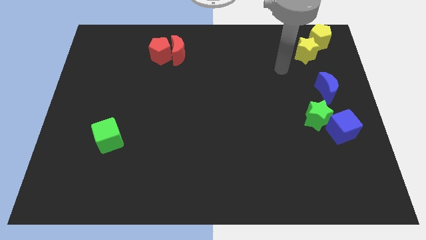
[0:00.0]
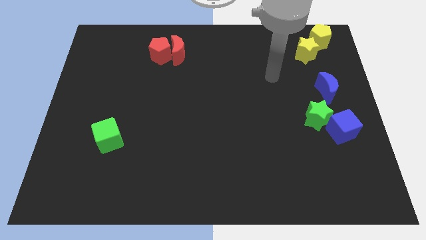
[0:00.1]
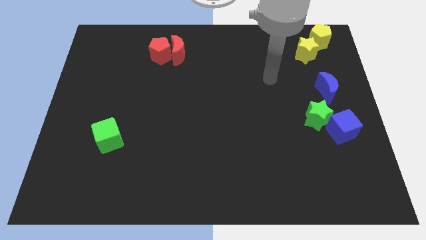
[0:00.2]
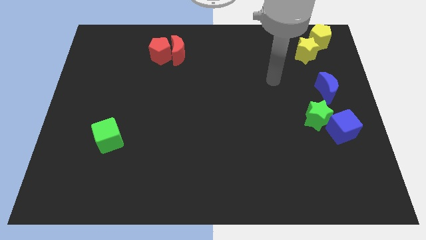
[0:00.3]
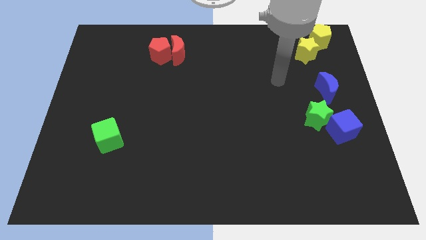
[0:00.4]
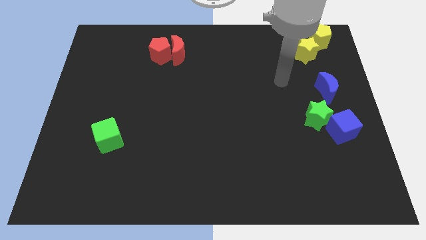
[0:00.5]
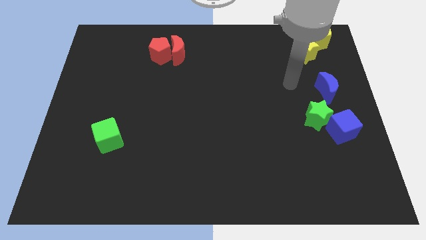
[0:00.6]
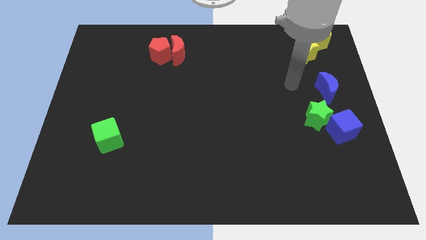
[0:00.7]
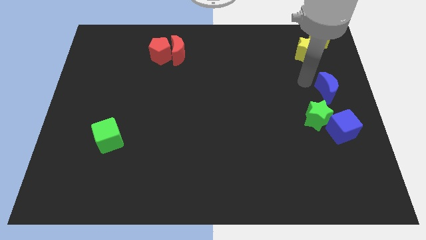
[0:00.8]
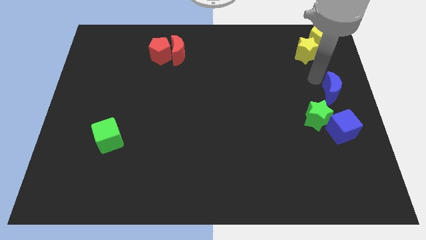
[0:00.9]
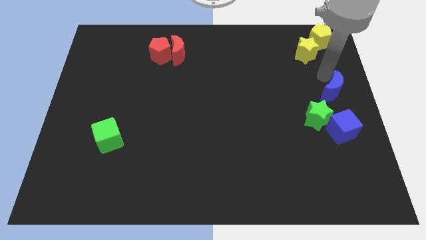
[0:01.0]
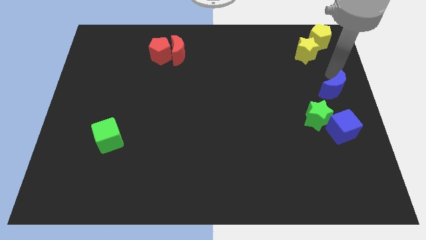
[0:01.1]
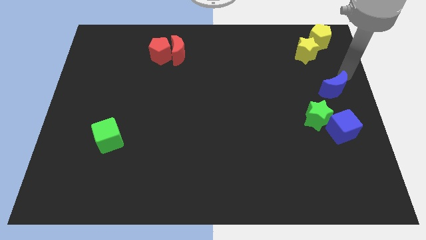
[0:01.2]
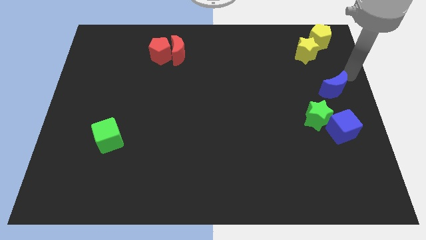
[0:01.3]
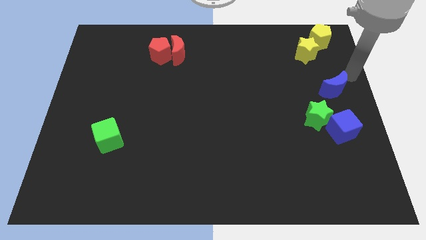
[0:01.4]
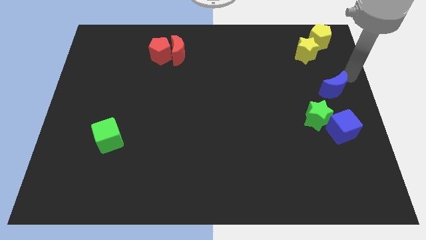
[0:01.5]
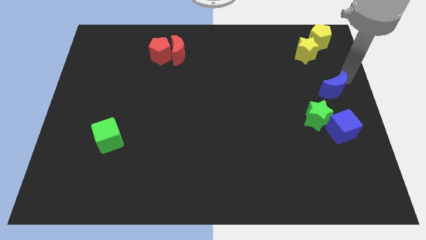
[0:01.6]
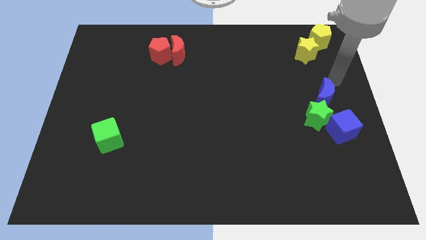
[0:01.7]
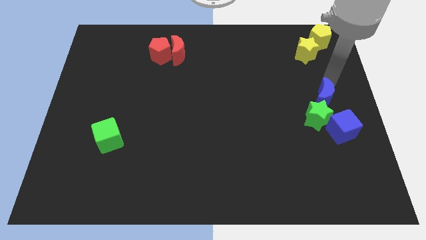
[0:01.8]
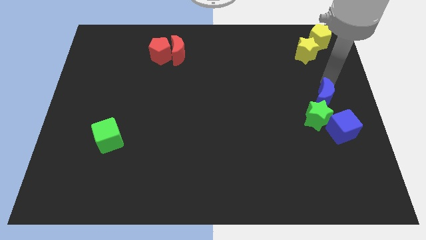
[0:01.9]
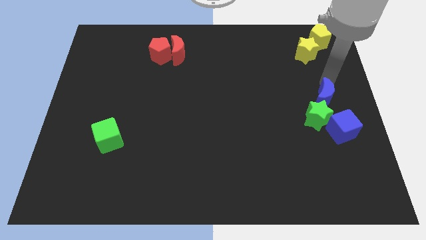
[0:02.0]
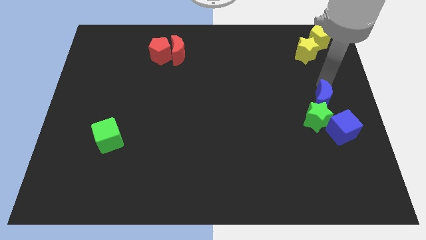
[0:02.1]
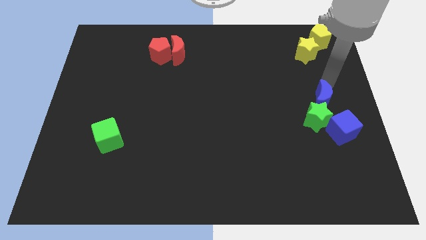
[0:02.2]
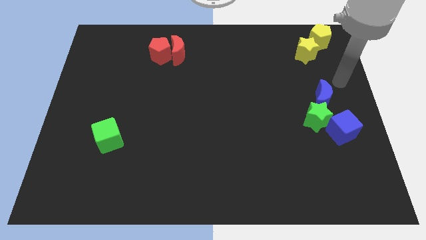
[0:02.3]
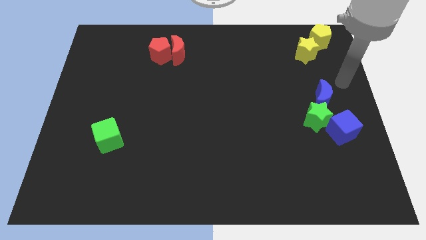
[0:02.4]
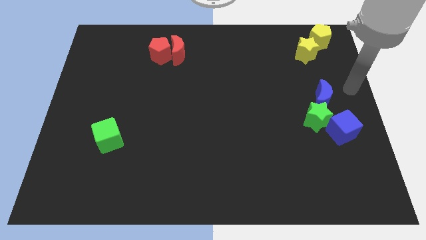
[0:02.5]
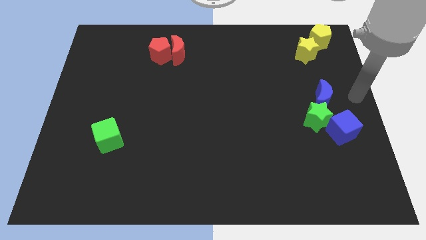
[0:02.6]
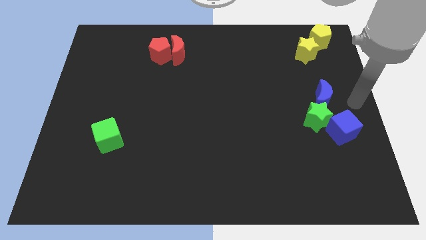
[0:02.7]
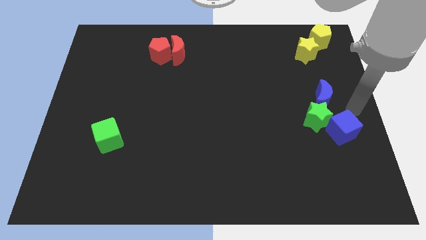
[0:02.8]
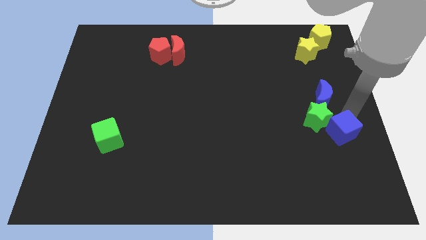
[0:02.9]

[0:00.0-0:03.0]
move the blue crescent above the green star

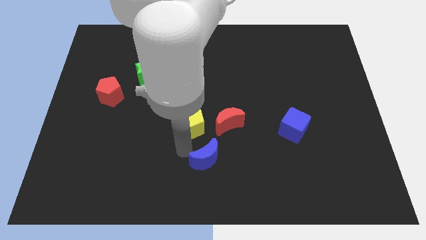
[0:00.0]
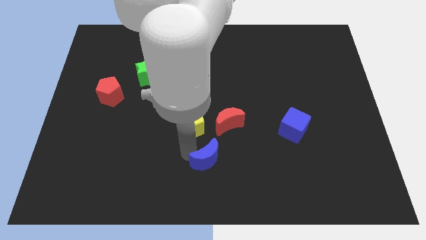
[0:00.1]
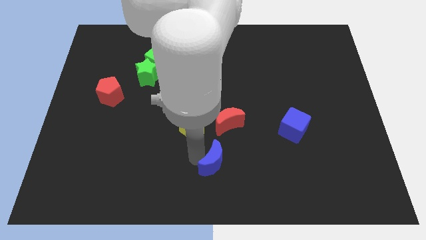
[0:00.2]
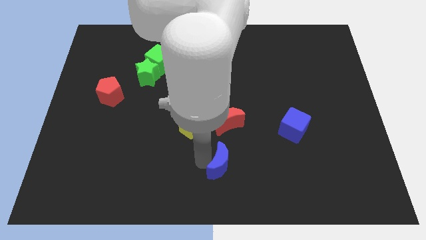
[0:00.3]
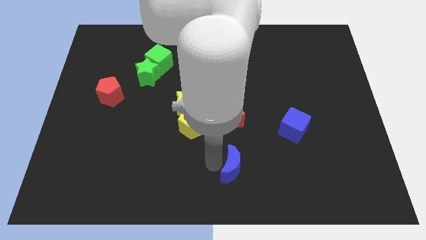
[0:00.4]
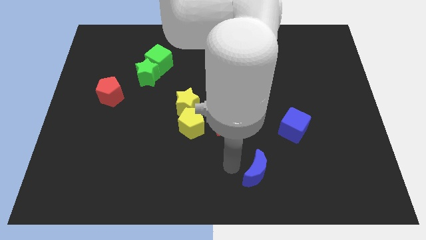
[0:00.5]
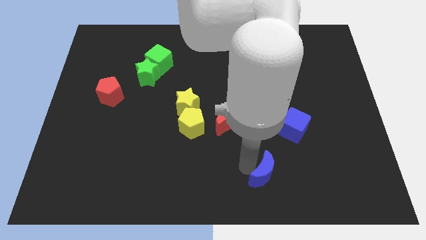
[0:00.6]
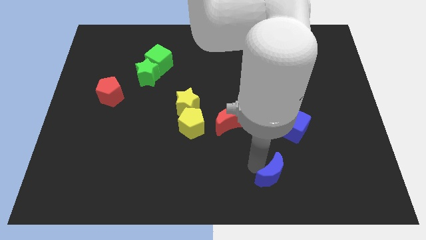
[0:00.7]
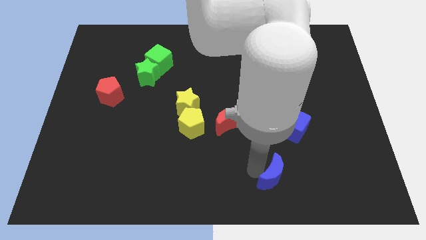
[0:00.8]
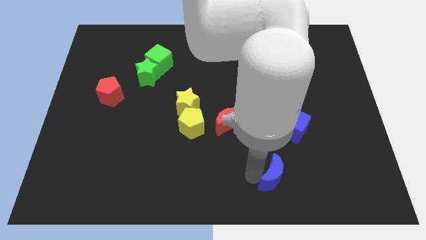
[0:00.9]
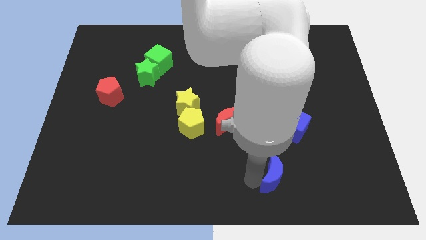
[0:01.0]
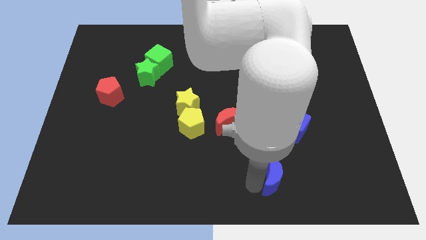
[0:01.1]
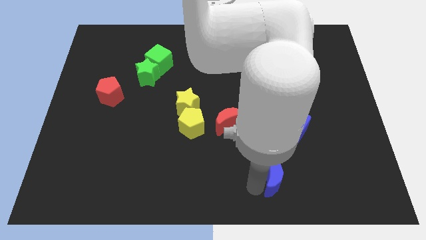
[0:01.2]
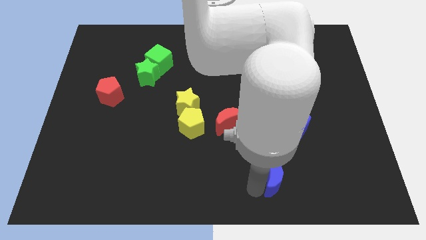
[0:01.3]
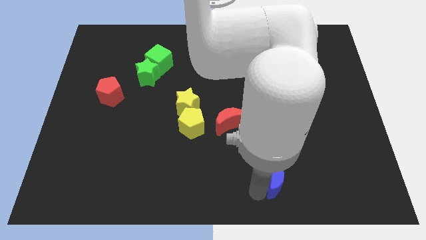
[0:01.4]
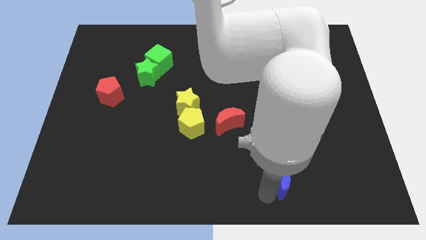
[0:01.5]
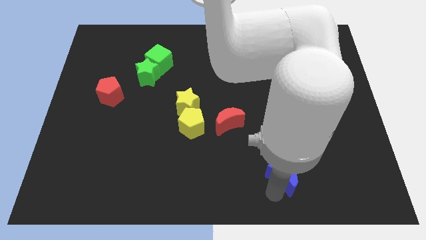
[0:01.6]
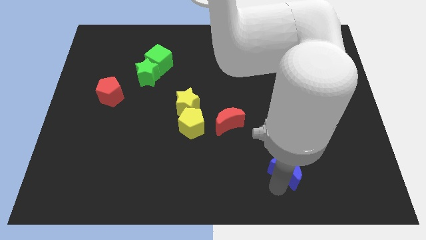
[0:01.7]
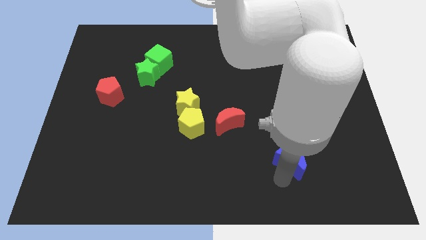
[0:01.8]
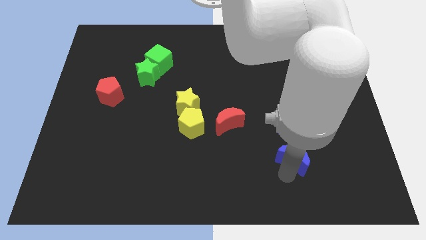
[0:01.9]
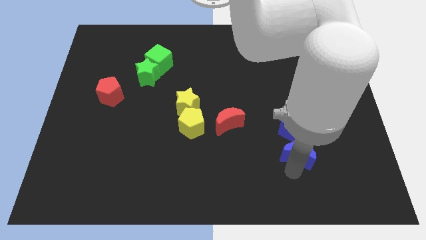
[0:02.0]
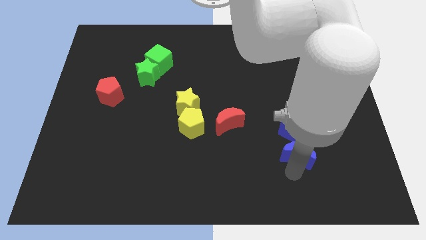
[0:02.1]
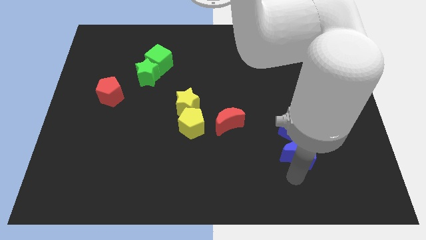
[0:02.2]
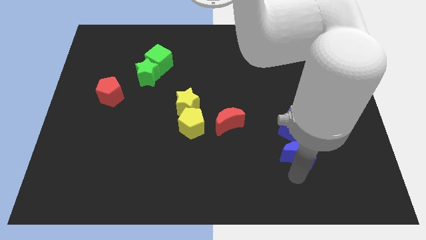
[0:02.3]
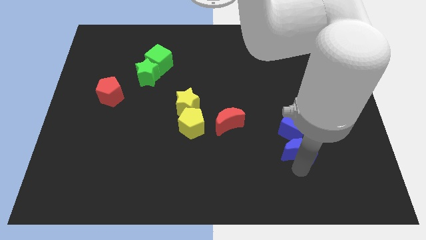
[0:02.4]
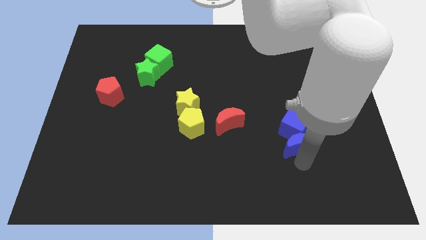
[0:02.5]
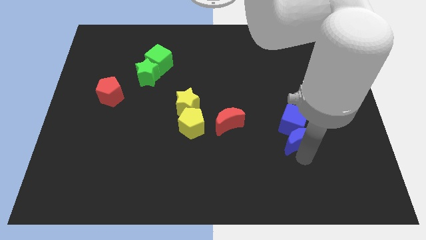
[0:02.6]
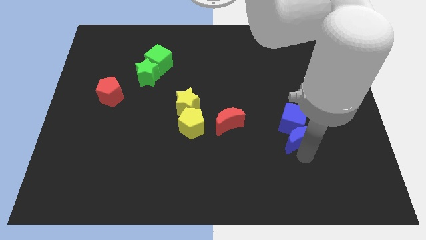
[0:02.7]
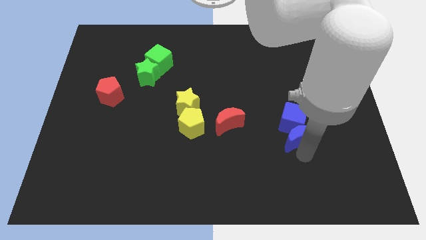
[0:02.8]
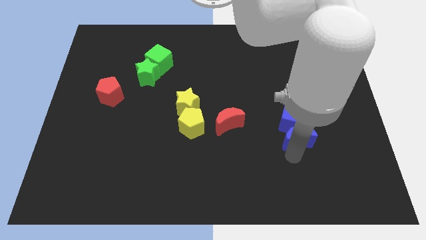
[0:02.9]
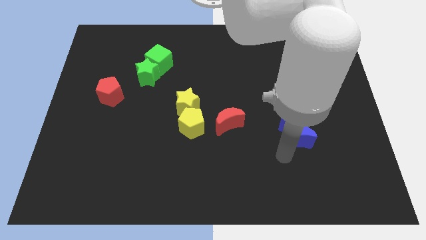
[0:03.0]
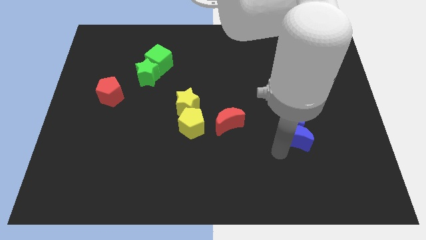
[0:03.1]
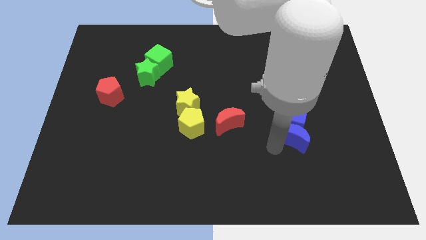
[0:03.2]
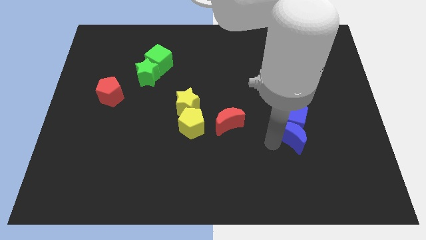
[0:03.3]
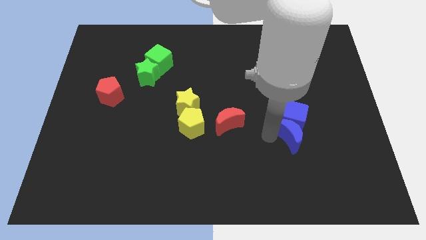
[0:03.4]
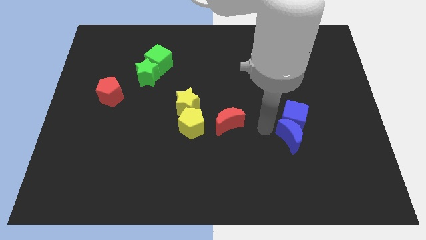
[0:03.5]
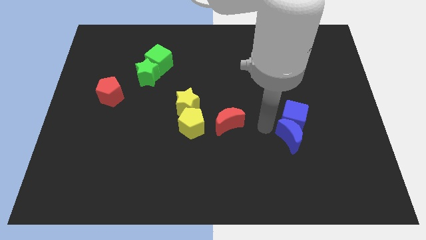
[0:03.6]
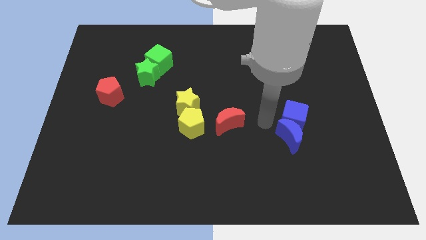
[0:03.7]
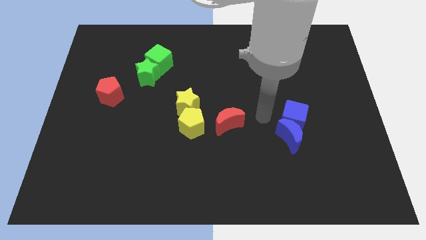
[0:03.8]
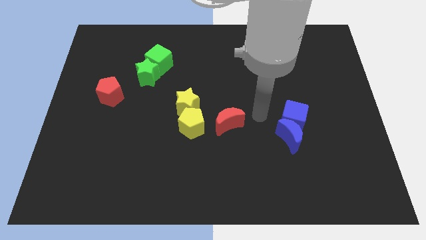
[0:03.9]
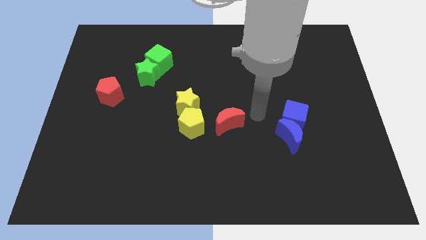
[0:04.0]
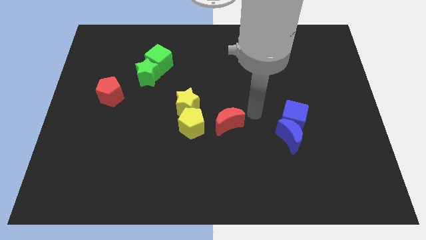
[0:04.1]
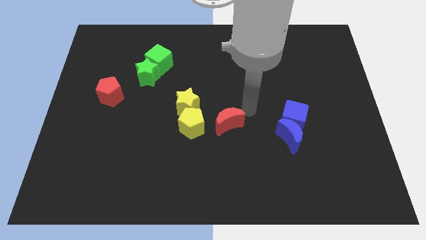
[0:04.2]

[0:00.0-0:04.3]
move blue moon into the blue cube

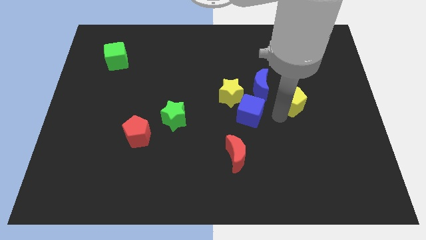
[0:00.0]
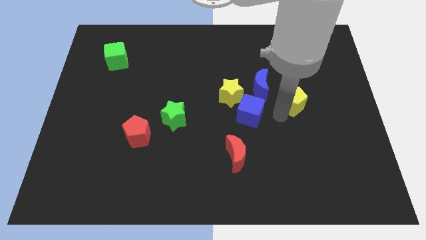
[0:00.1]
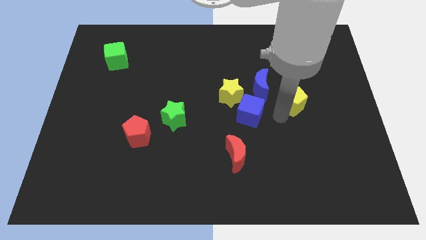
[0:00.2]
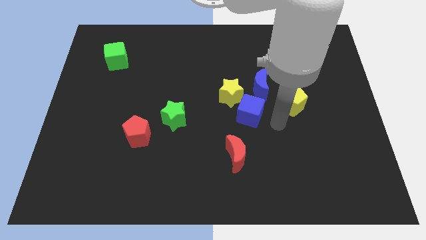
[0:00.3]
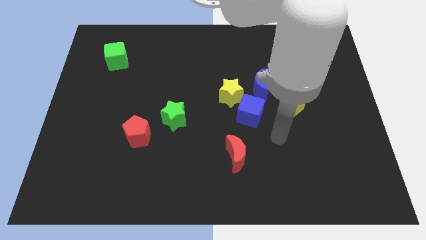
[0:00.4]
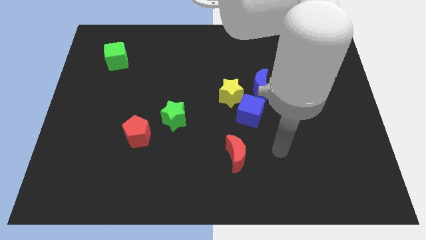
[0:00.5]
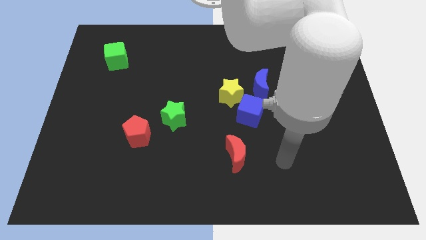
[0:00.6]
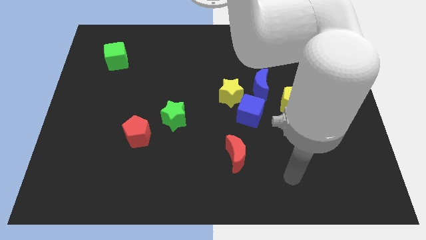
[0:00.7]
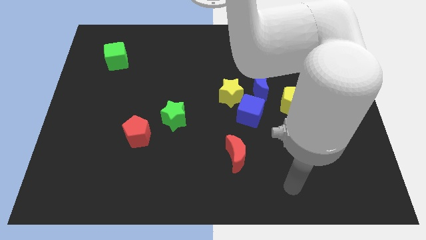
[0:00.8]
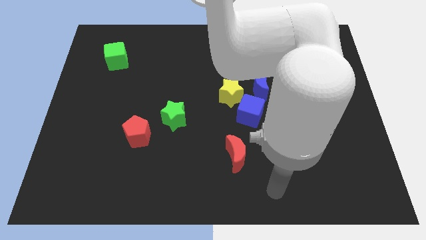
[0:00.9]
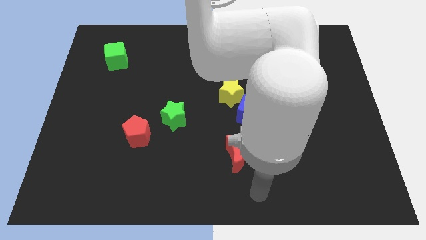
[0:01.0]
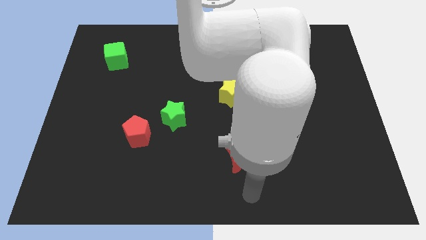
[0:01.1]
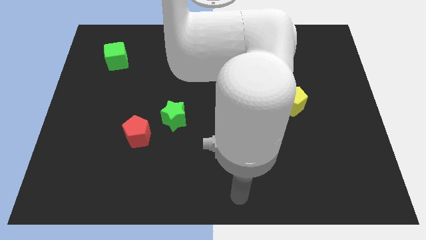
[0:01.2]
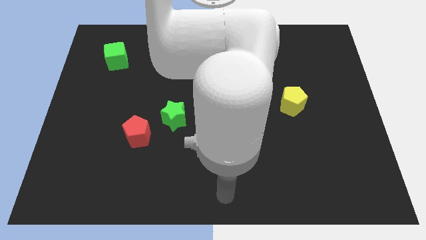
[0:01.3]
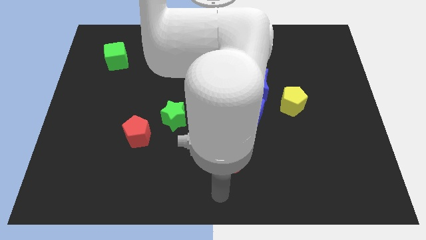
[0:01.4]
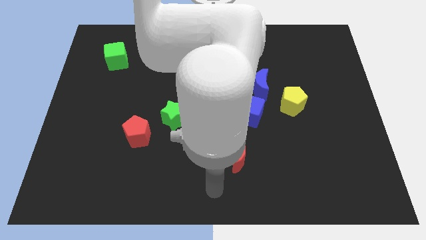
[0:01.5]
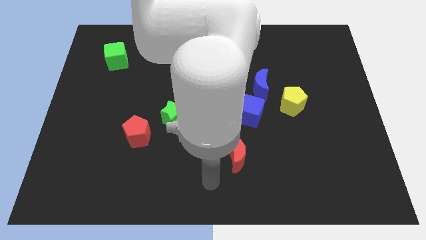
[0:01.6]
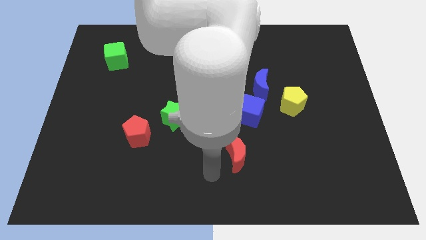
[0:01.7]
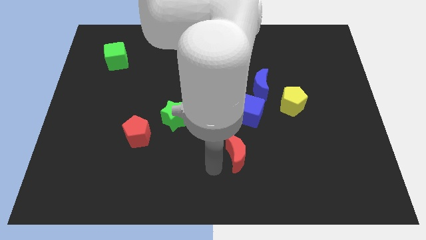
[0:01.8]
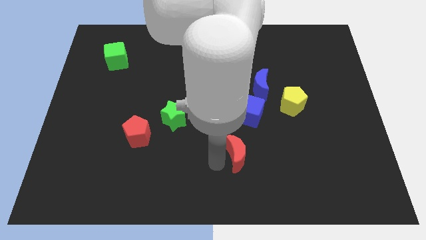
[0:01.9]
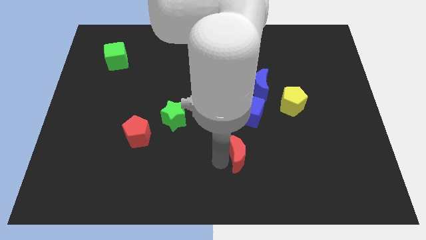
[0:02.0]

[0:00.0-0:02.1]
move the arm to the left of the red crescent
